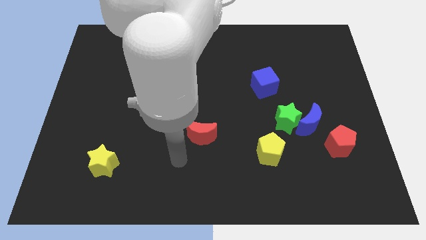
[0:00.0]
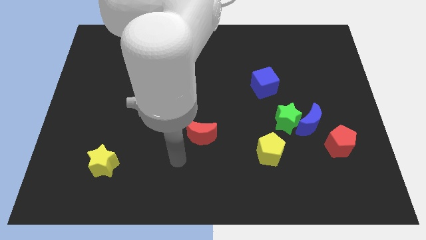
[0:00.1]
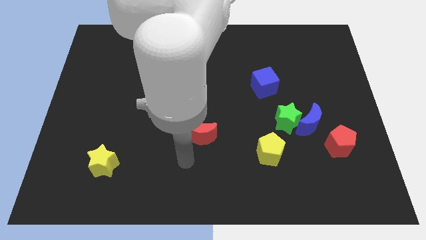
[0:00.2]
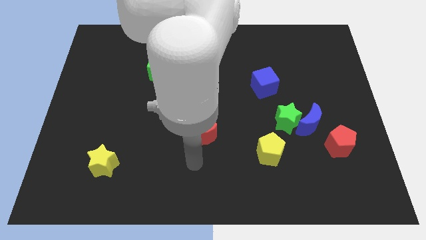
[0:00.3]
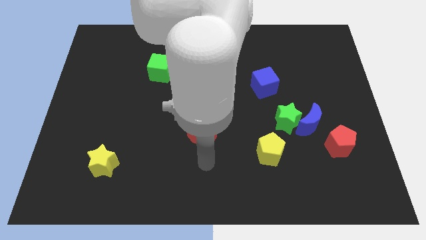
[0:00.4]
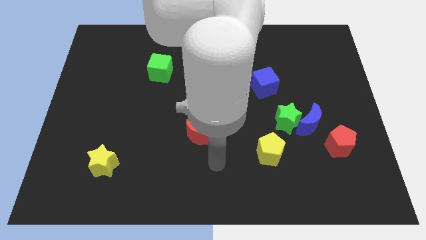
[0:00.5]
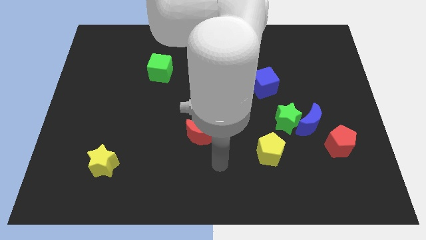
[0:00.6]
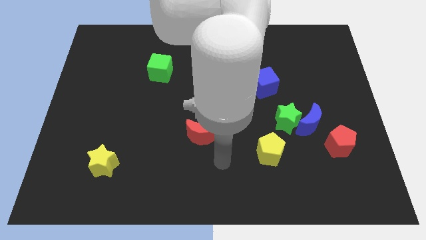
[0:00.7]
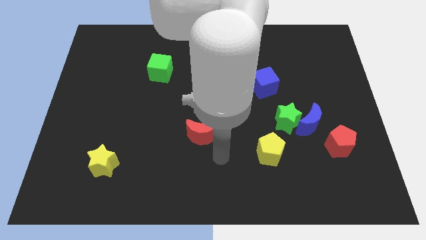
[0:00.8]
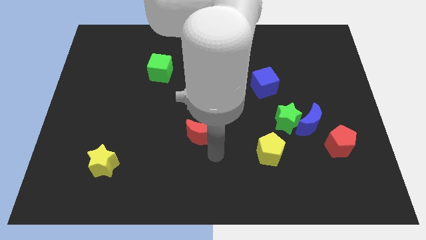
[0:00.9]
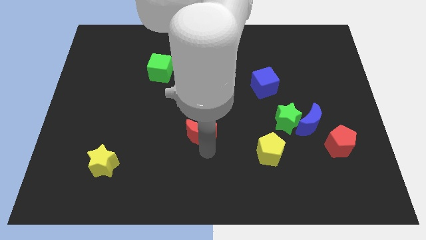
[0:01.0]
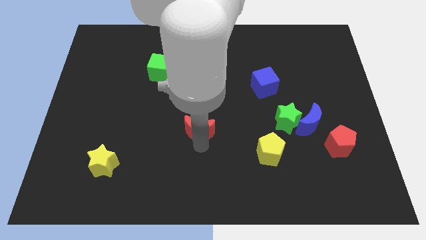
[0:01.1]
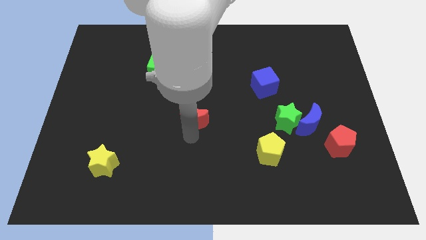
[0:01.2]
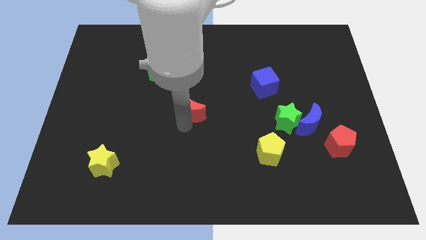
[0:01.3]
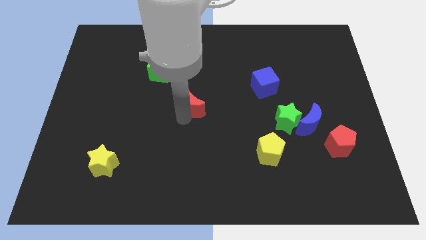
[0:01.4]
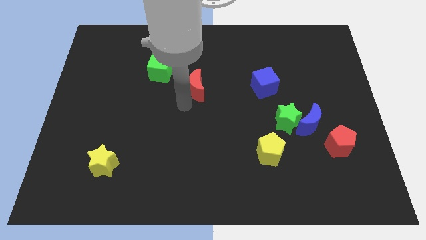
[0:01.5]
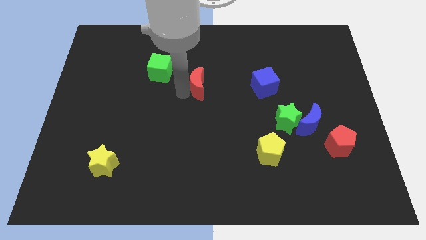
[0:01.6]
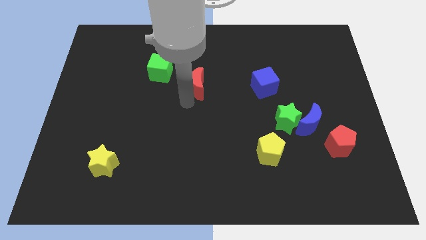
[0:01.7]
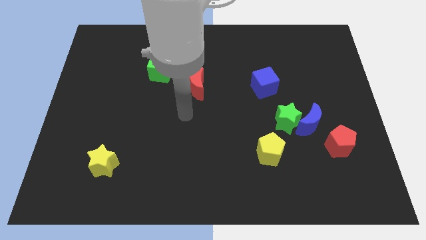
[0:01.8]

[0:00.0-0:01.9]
push the red moon upwards

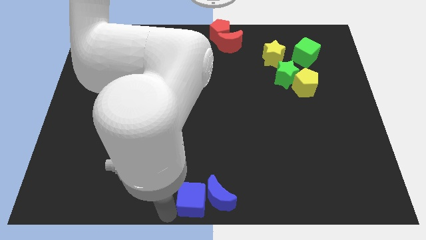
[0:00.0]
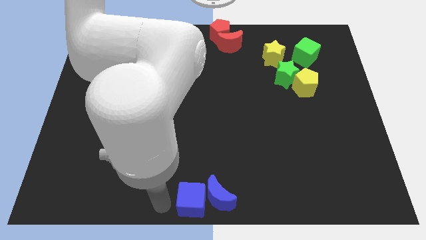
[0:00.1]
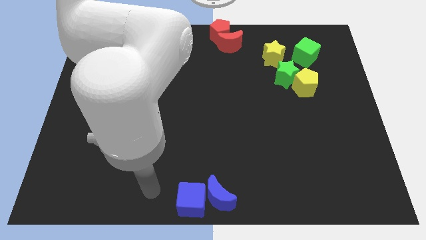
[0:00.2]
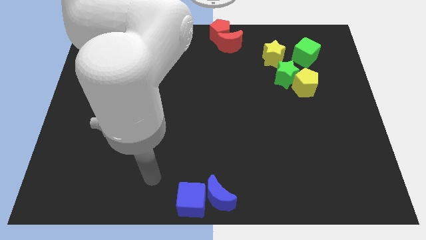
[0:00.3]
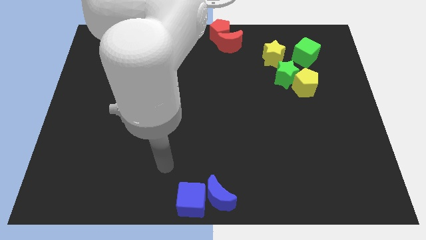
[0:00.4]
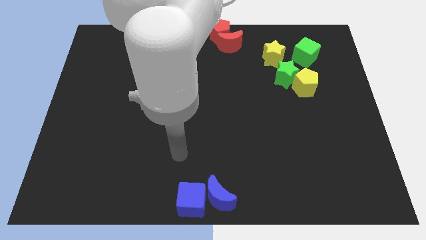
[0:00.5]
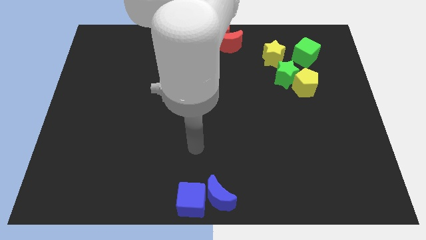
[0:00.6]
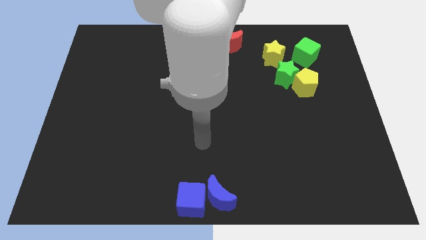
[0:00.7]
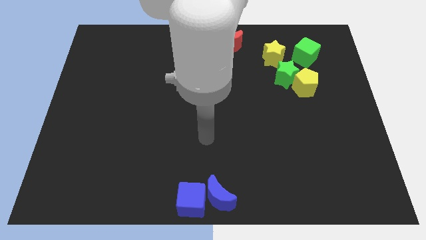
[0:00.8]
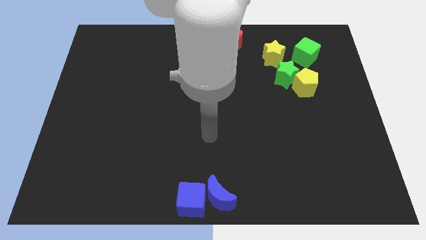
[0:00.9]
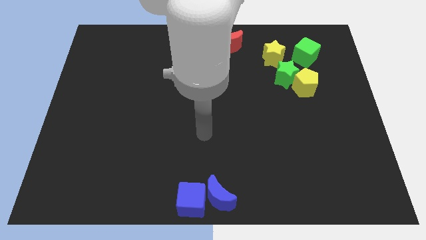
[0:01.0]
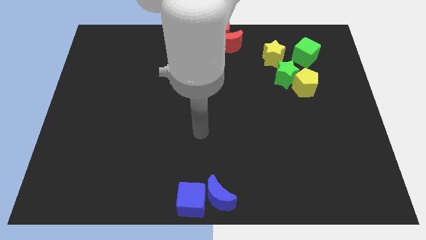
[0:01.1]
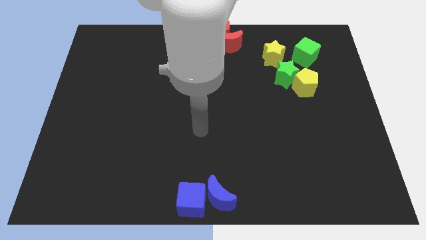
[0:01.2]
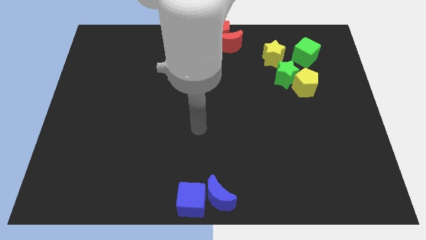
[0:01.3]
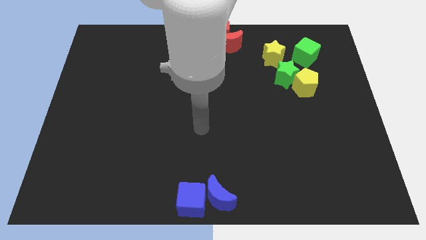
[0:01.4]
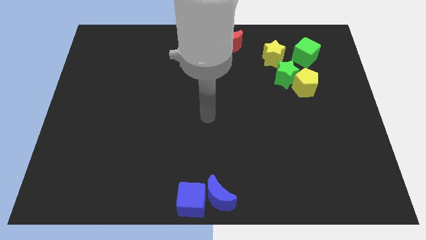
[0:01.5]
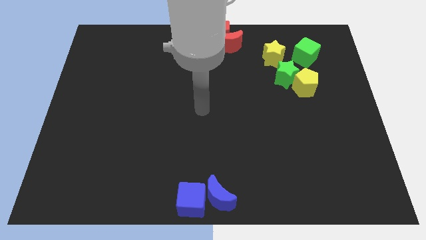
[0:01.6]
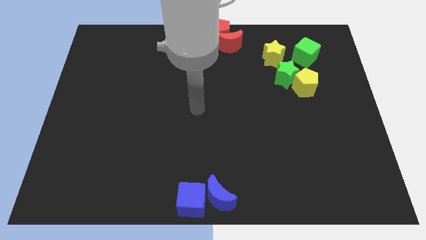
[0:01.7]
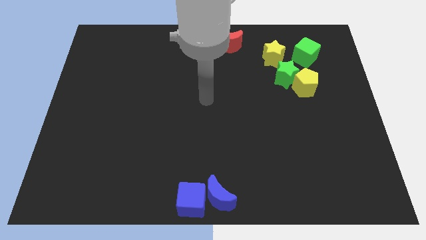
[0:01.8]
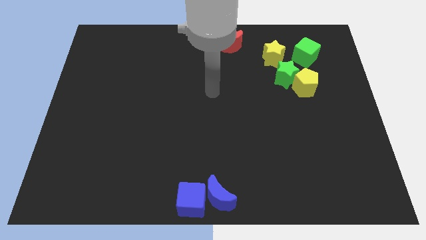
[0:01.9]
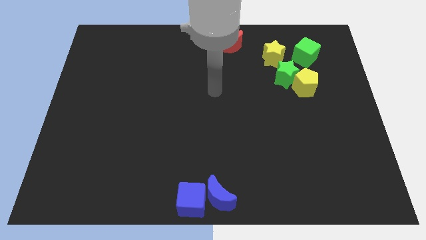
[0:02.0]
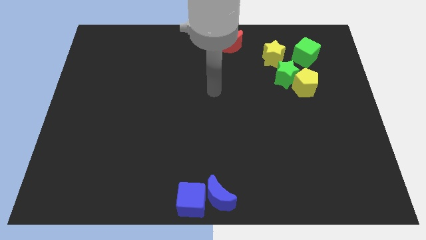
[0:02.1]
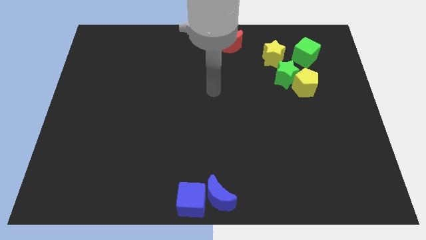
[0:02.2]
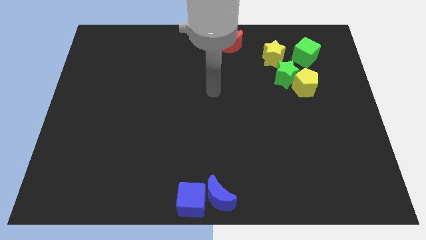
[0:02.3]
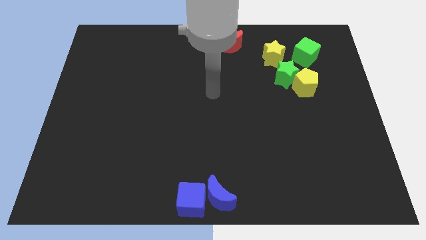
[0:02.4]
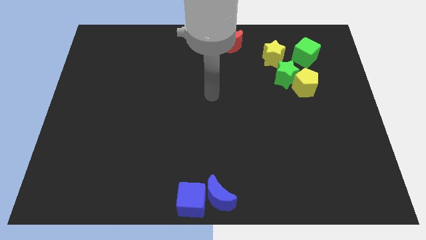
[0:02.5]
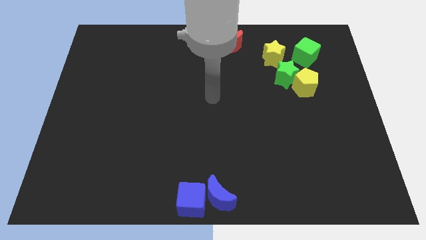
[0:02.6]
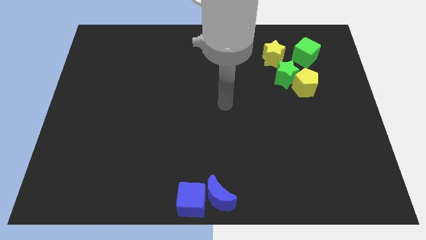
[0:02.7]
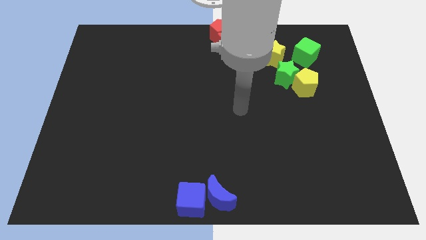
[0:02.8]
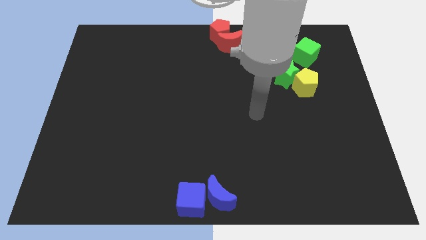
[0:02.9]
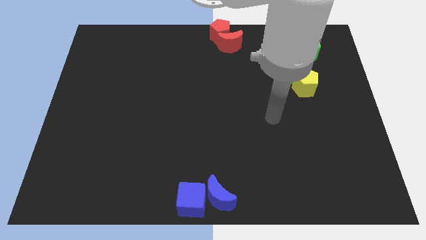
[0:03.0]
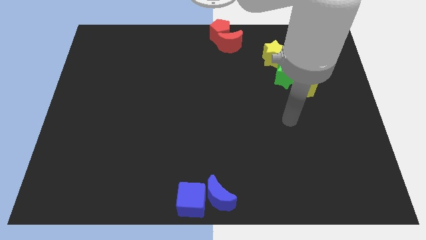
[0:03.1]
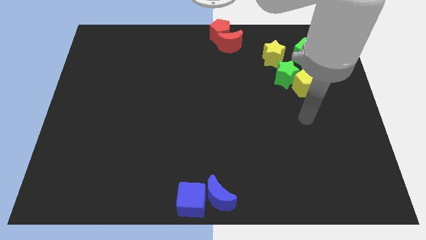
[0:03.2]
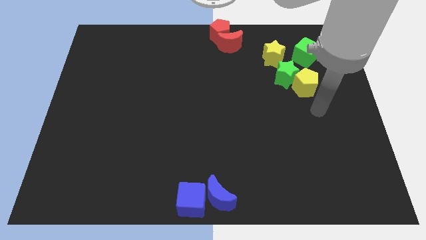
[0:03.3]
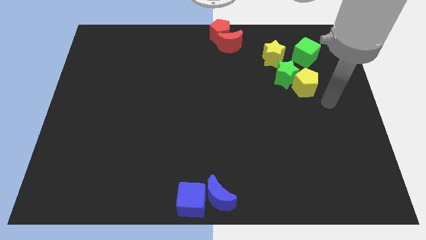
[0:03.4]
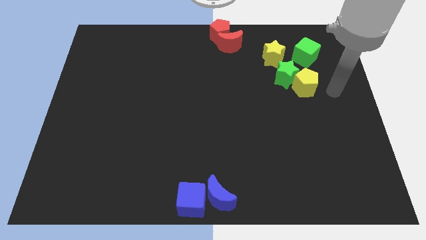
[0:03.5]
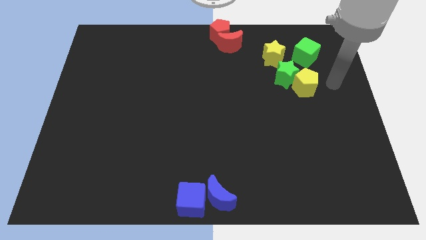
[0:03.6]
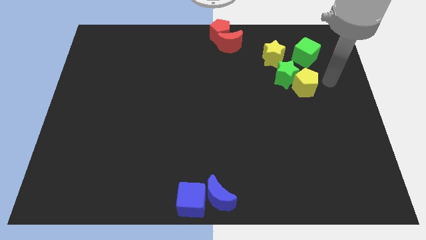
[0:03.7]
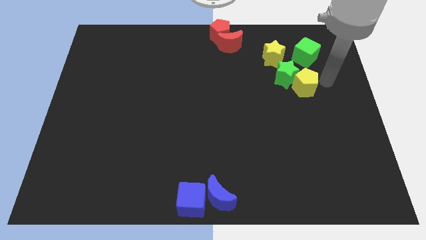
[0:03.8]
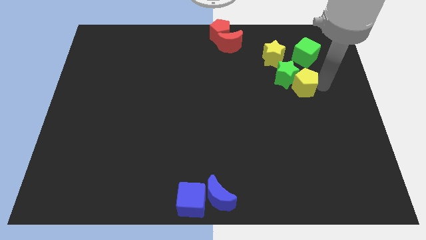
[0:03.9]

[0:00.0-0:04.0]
move your arm close to the right side of the yellow pentagon

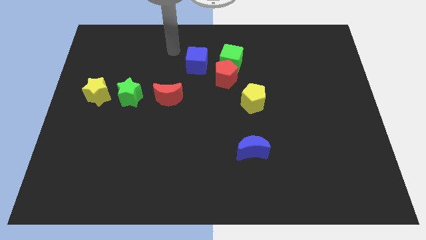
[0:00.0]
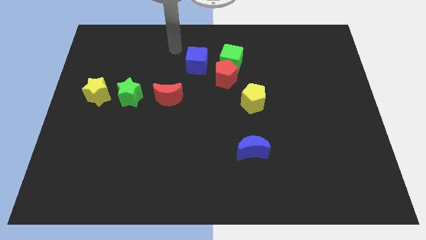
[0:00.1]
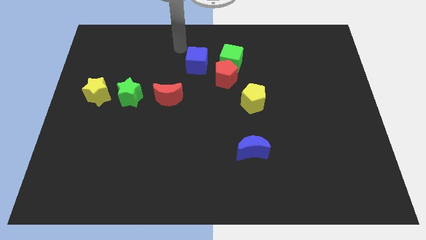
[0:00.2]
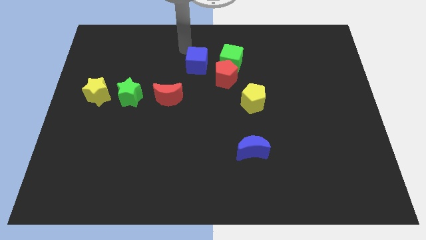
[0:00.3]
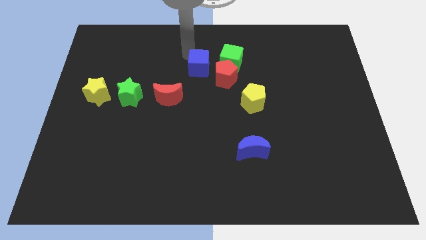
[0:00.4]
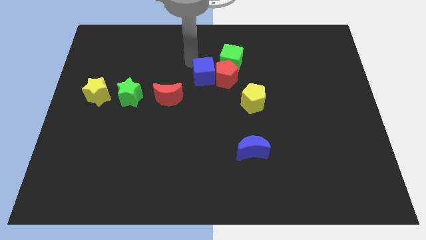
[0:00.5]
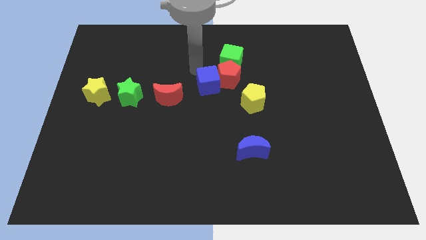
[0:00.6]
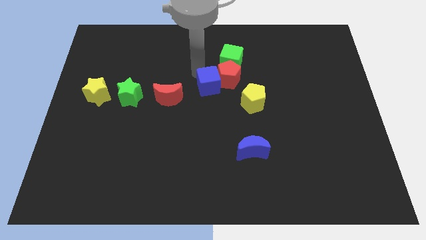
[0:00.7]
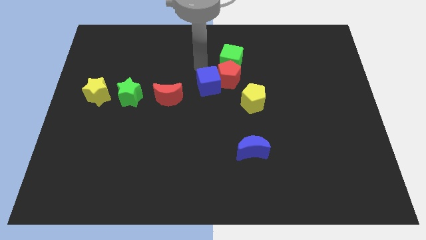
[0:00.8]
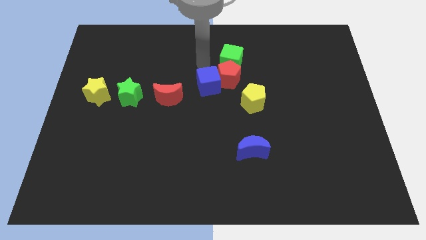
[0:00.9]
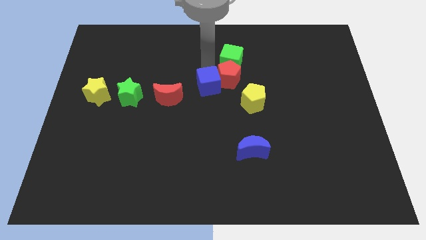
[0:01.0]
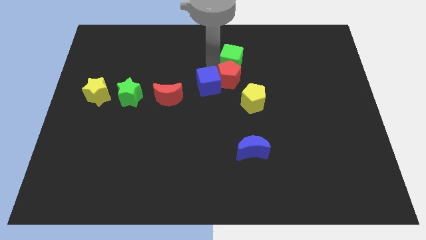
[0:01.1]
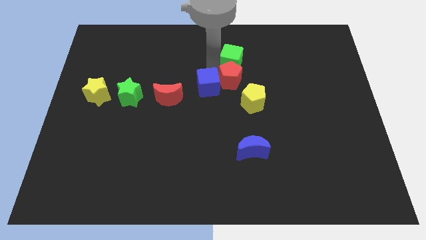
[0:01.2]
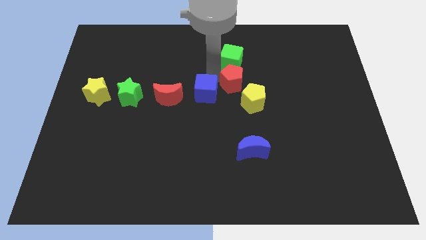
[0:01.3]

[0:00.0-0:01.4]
touch red pentagon with blue cube

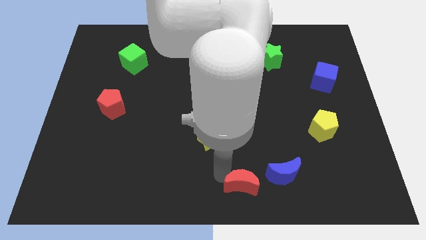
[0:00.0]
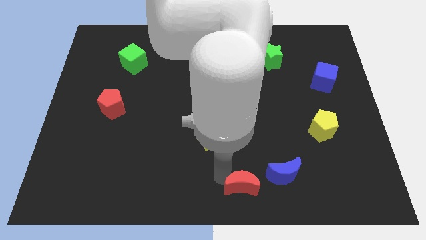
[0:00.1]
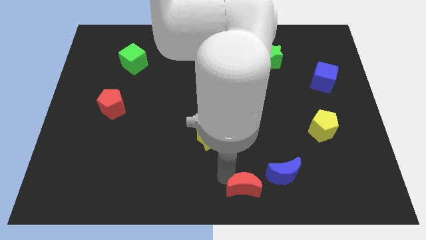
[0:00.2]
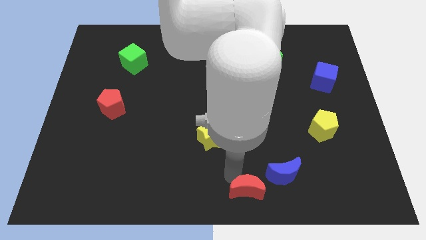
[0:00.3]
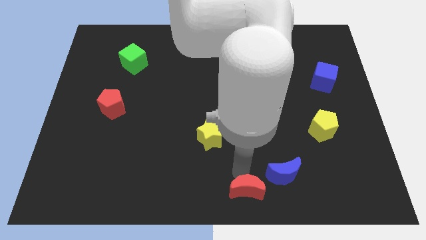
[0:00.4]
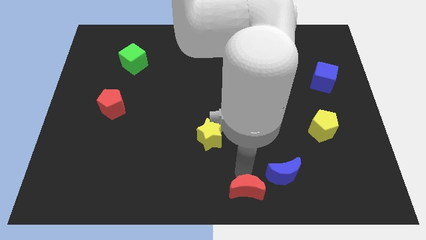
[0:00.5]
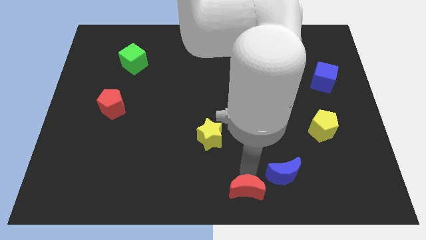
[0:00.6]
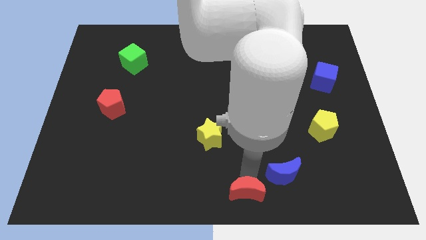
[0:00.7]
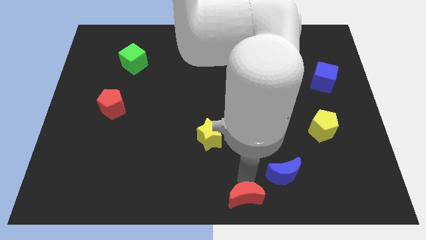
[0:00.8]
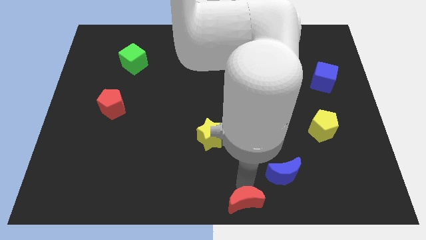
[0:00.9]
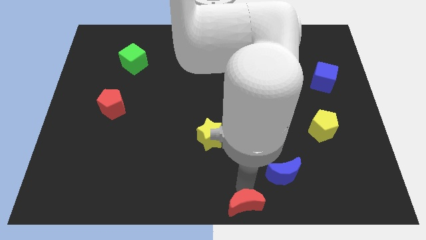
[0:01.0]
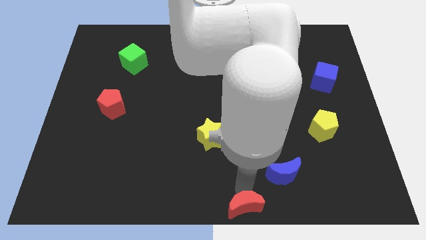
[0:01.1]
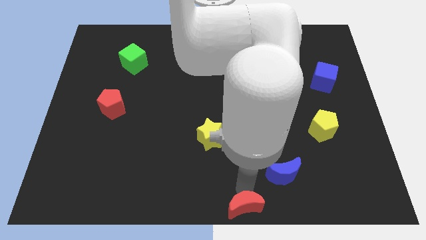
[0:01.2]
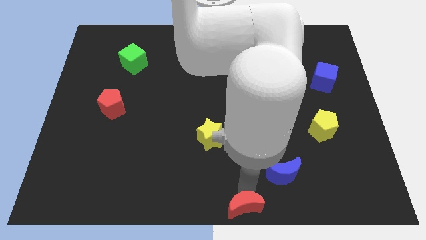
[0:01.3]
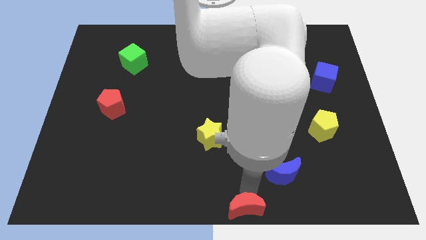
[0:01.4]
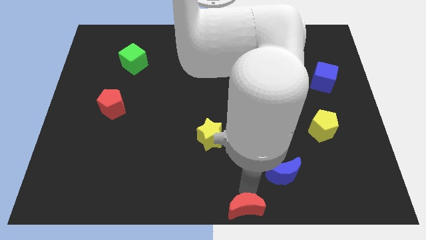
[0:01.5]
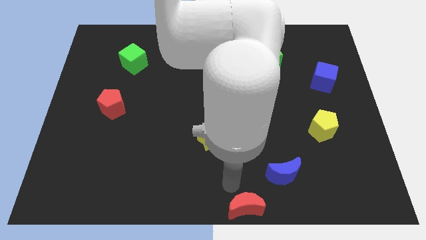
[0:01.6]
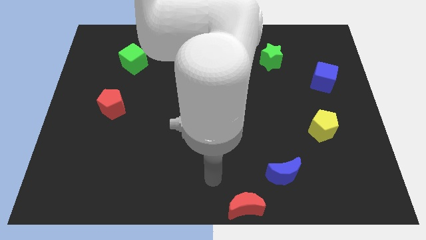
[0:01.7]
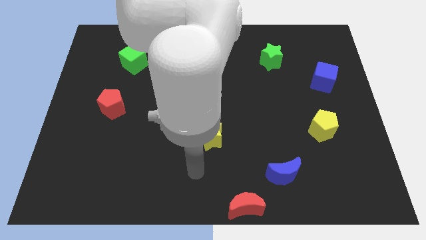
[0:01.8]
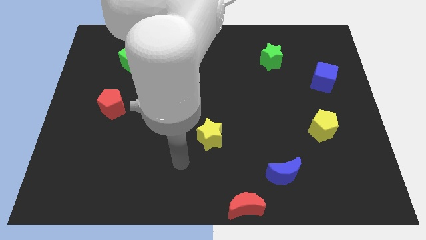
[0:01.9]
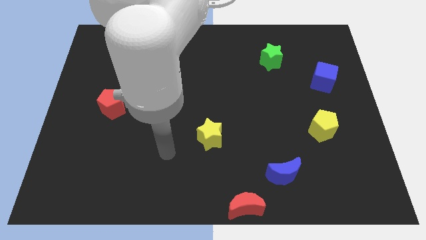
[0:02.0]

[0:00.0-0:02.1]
move the red crescent at the bottom center of the board
